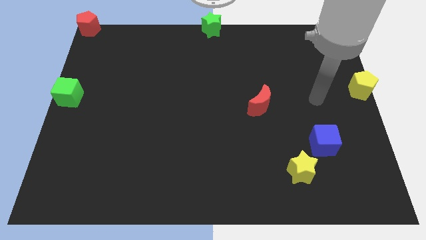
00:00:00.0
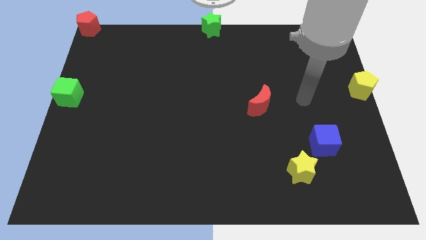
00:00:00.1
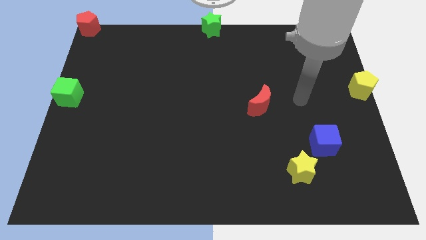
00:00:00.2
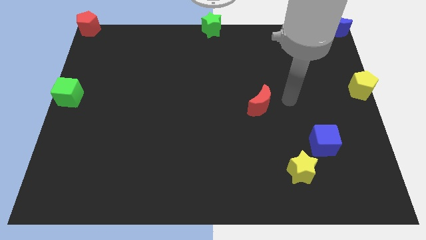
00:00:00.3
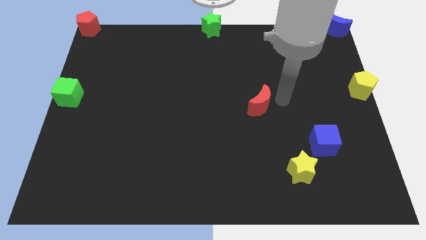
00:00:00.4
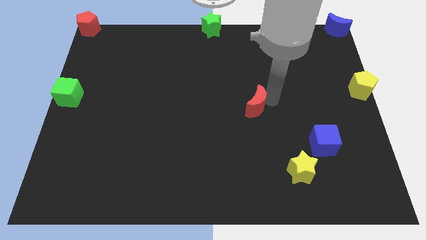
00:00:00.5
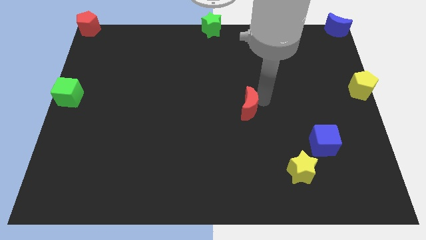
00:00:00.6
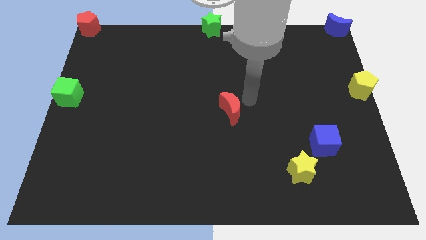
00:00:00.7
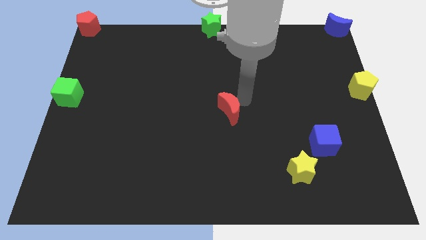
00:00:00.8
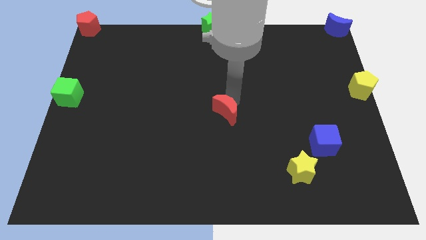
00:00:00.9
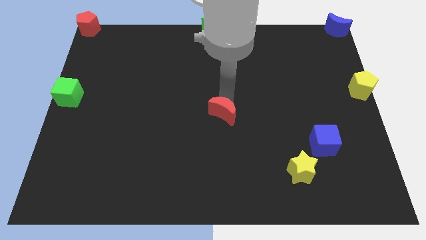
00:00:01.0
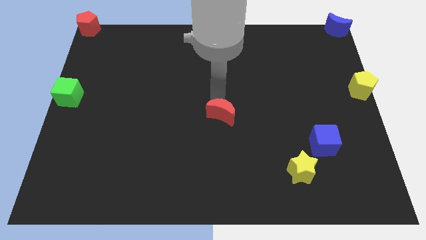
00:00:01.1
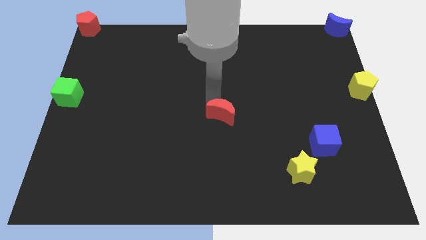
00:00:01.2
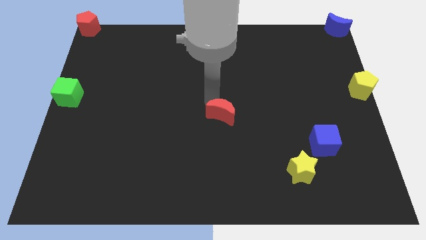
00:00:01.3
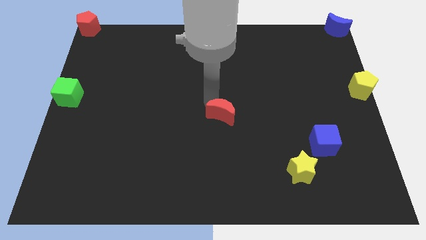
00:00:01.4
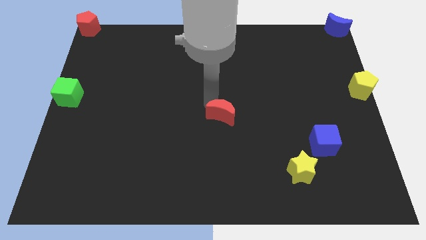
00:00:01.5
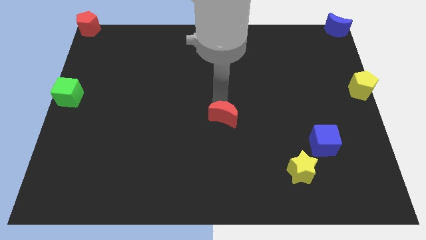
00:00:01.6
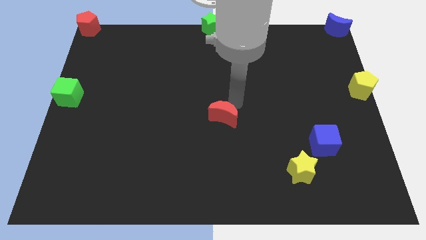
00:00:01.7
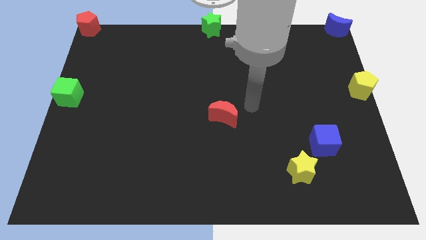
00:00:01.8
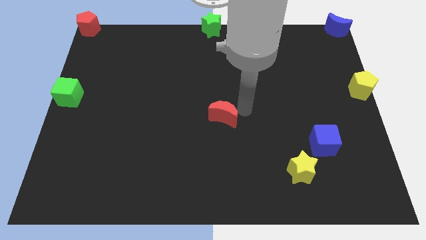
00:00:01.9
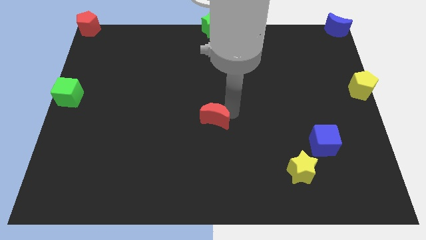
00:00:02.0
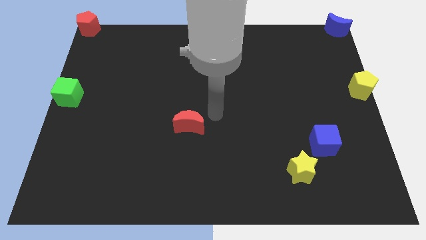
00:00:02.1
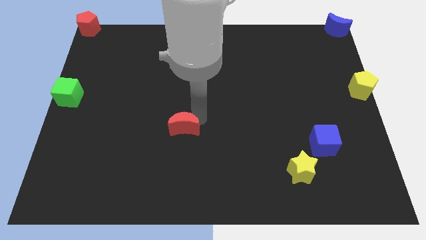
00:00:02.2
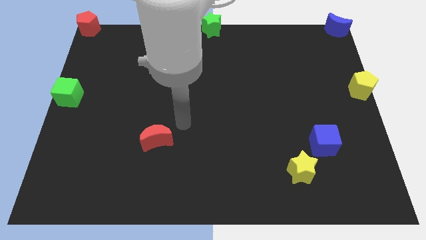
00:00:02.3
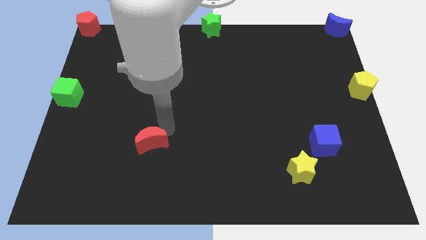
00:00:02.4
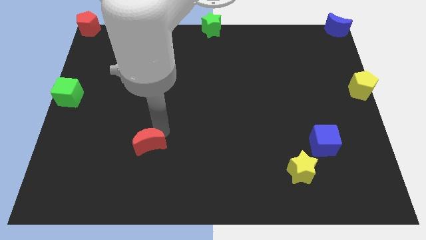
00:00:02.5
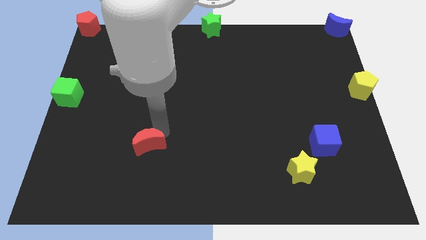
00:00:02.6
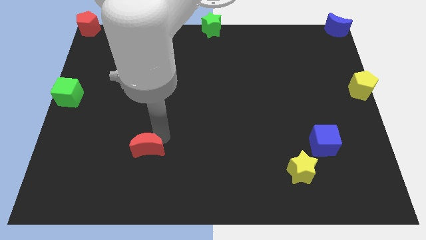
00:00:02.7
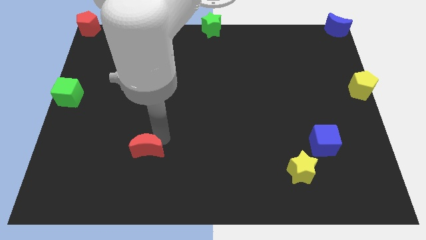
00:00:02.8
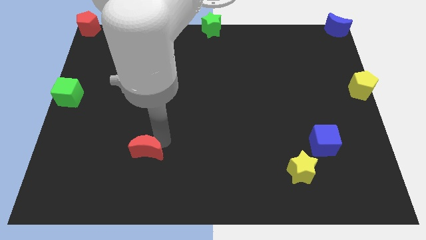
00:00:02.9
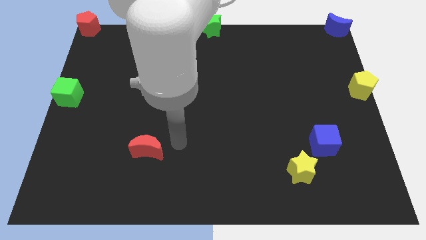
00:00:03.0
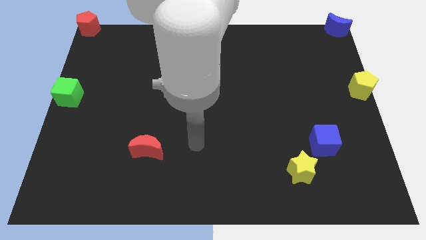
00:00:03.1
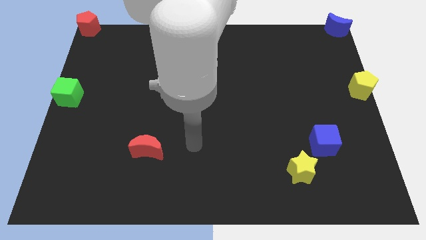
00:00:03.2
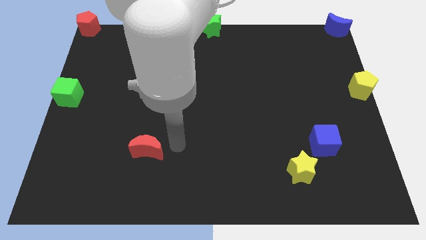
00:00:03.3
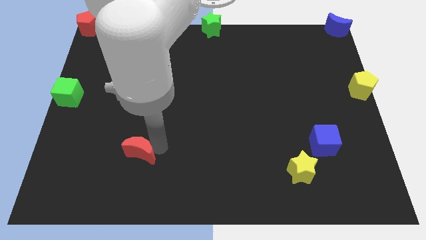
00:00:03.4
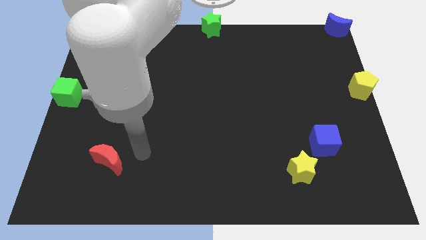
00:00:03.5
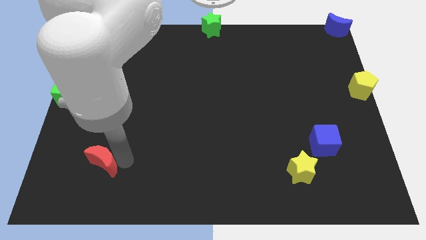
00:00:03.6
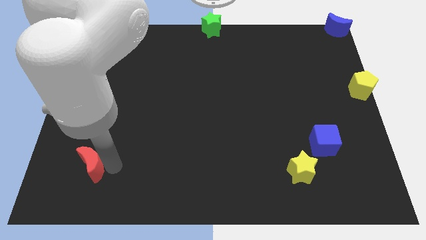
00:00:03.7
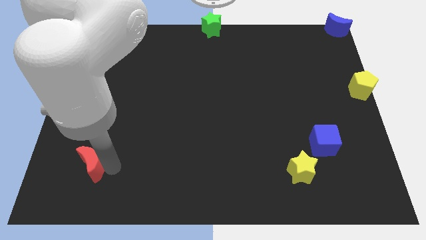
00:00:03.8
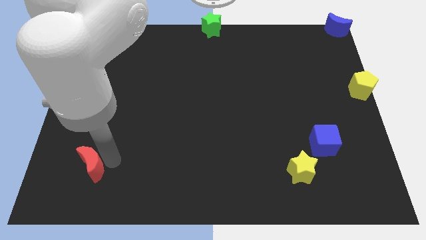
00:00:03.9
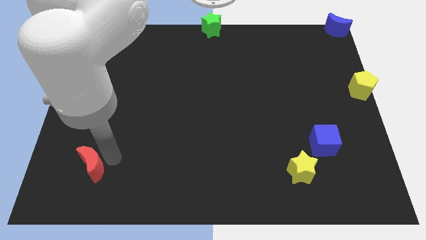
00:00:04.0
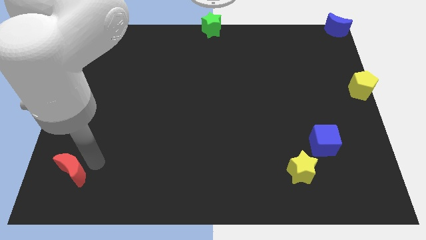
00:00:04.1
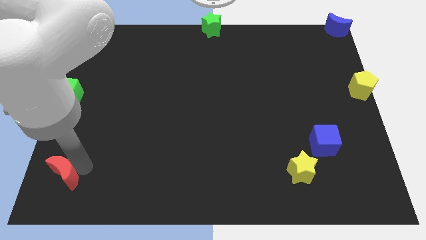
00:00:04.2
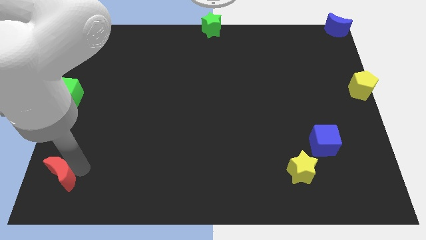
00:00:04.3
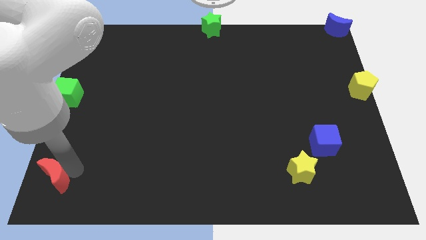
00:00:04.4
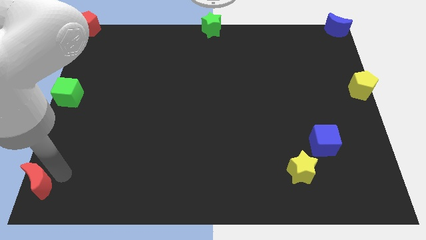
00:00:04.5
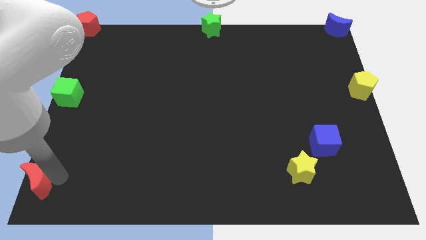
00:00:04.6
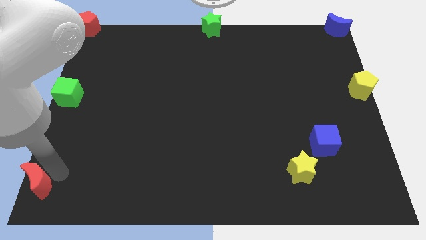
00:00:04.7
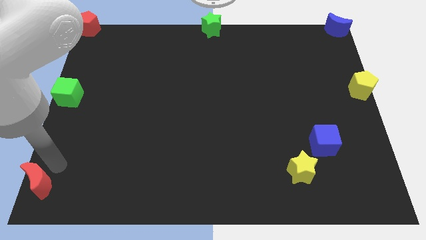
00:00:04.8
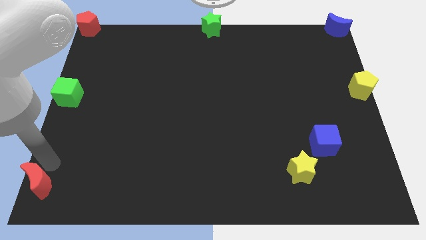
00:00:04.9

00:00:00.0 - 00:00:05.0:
move the red crescent towards the bottom left corner

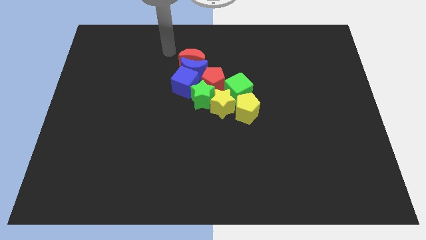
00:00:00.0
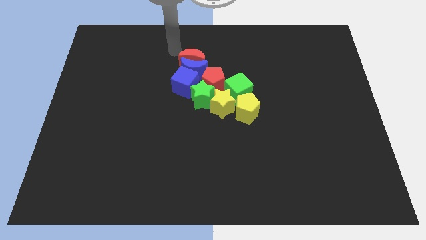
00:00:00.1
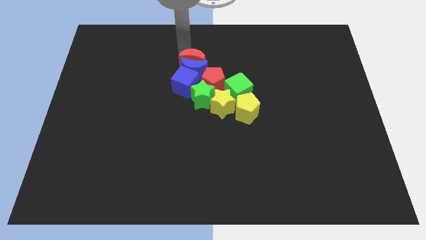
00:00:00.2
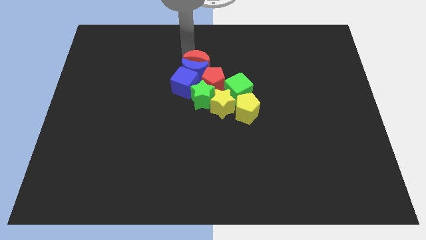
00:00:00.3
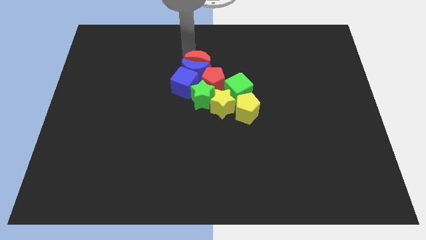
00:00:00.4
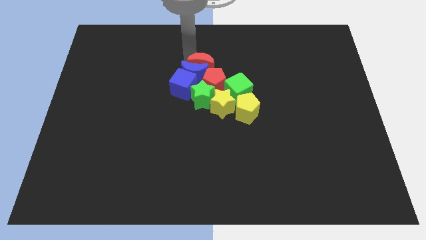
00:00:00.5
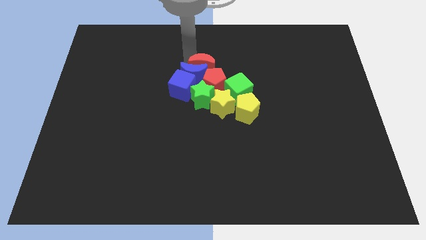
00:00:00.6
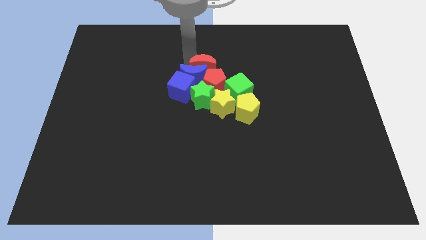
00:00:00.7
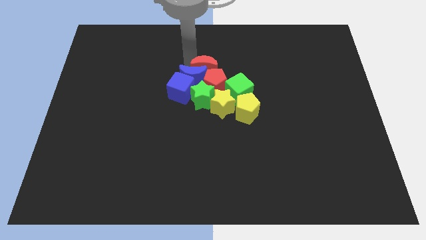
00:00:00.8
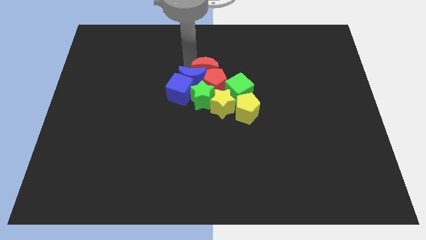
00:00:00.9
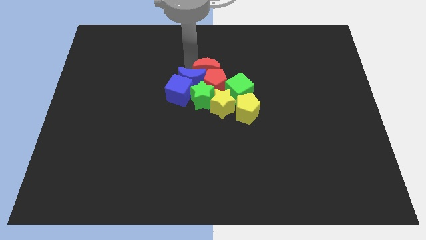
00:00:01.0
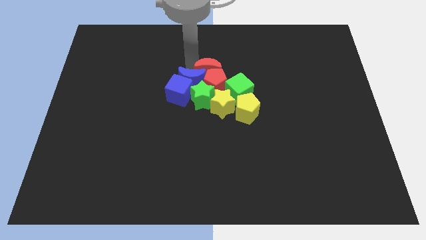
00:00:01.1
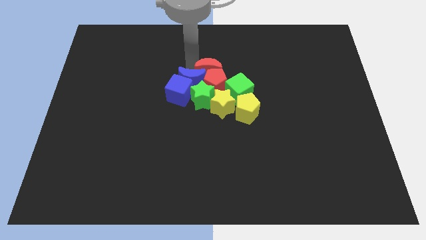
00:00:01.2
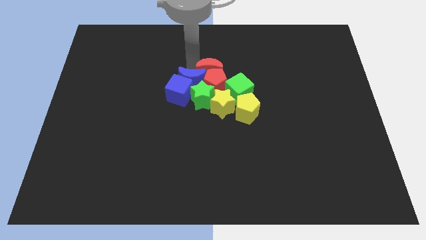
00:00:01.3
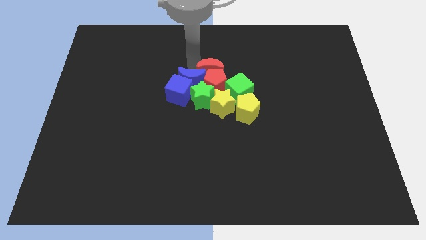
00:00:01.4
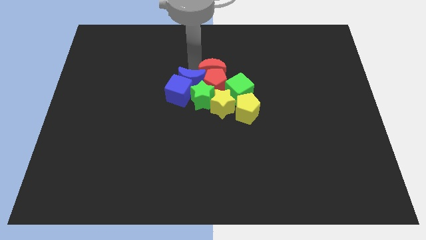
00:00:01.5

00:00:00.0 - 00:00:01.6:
move the red crescent into the red pentagon

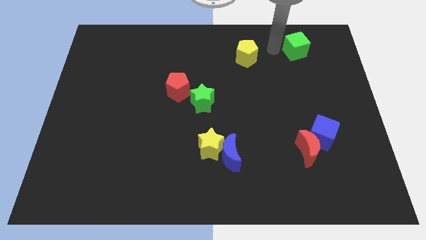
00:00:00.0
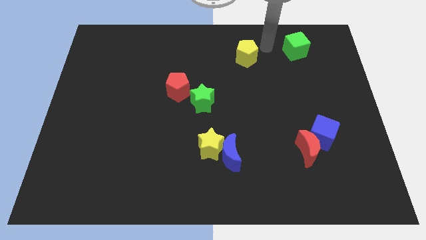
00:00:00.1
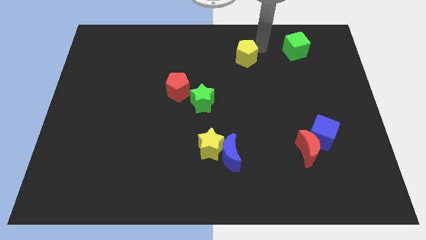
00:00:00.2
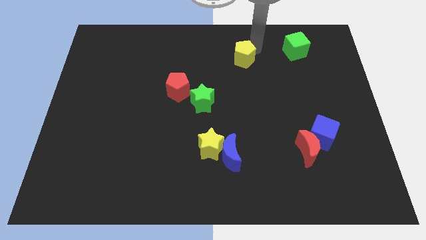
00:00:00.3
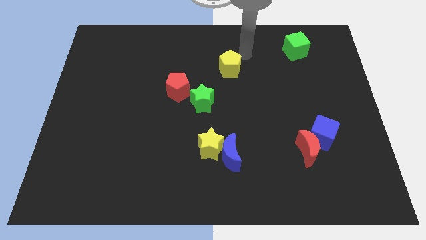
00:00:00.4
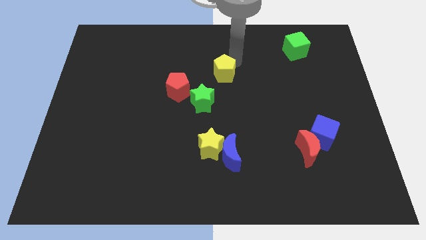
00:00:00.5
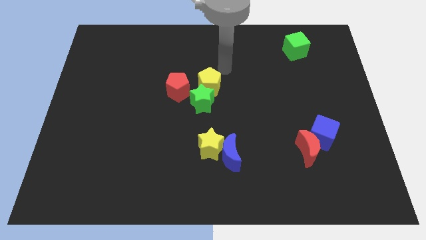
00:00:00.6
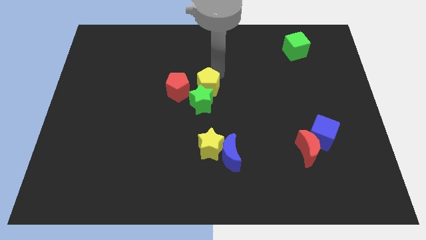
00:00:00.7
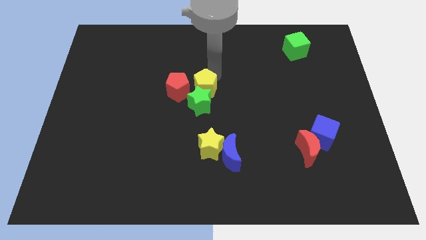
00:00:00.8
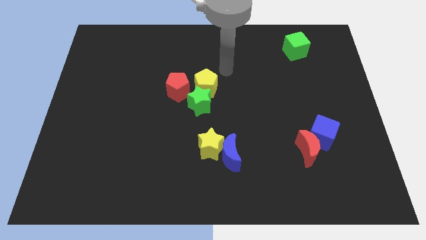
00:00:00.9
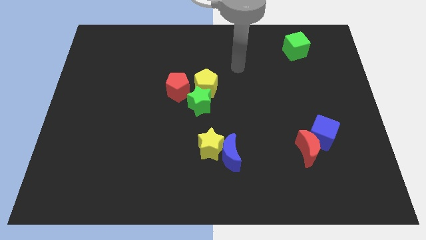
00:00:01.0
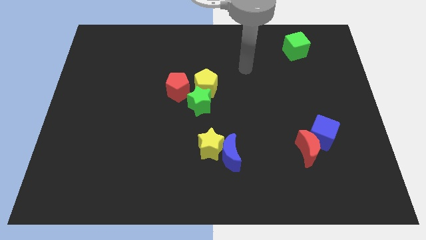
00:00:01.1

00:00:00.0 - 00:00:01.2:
push the yellow pentagon to the top right side of the green star

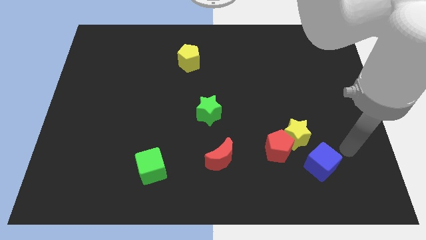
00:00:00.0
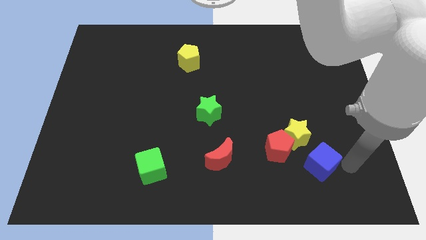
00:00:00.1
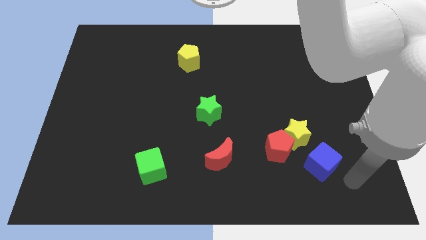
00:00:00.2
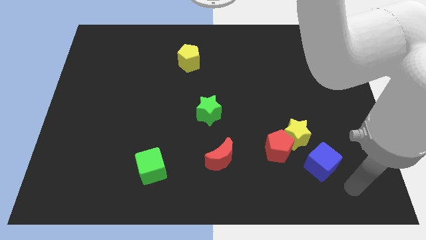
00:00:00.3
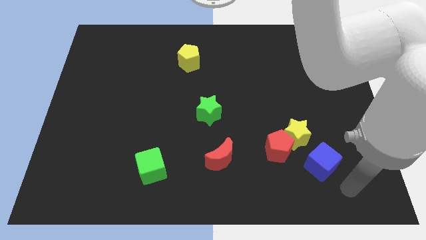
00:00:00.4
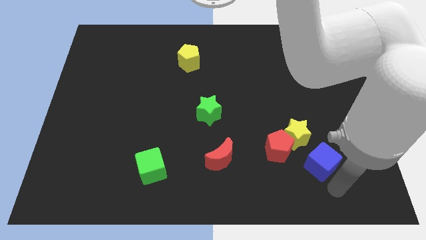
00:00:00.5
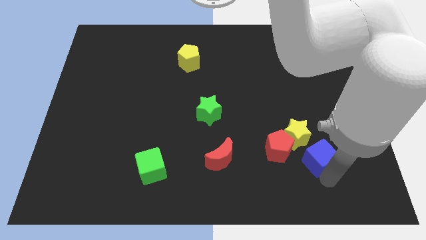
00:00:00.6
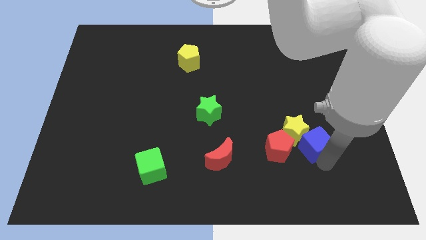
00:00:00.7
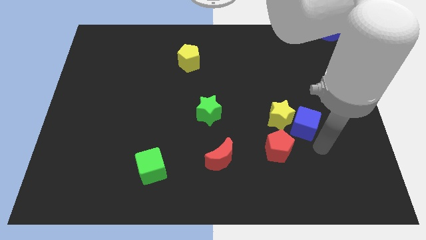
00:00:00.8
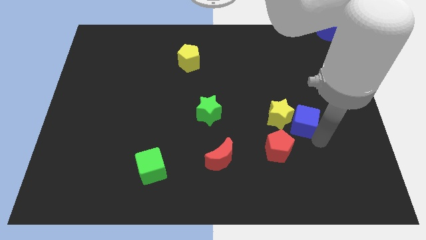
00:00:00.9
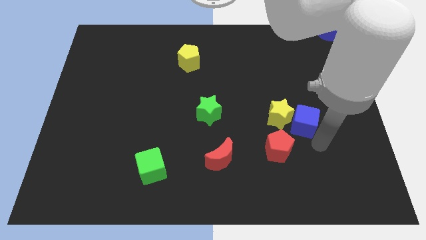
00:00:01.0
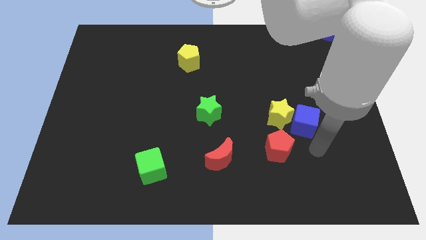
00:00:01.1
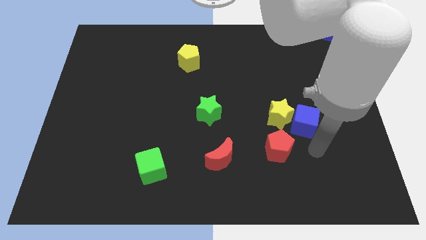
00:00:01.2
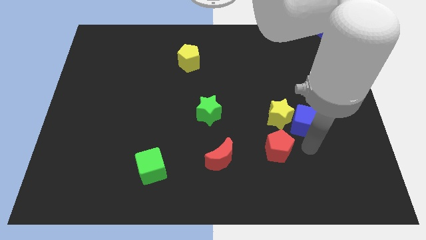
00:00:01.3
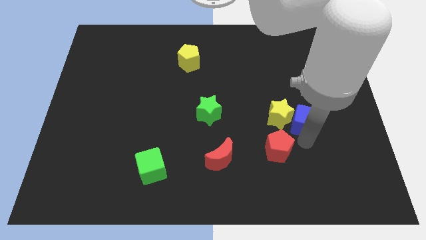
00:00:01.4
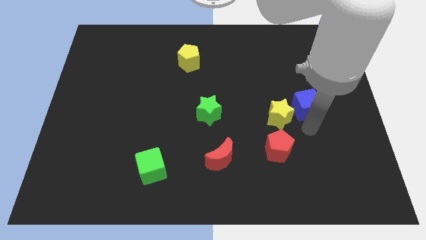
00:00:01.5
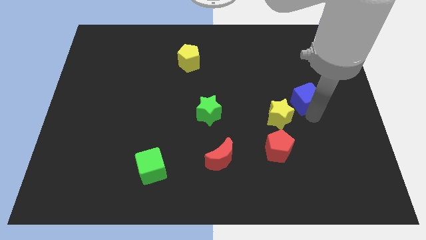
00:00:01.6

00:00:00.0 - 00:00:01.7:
move yellow star slightly up with the help of blue cube
